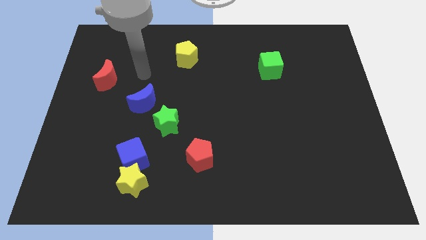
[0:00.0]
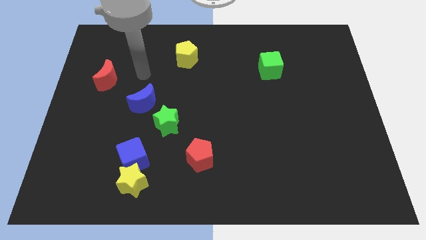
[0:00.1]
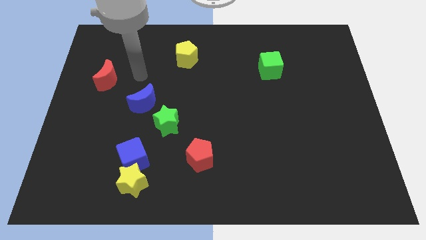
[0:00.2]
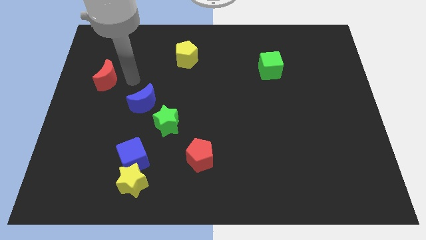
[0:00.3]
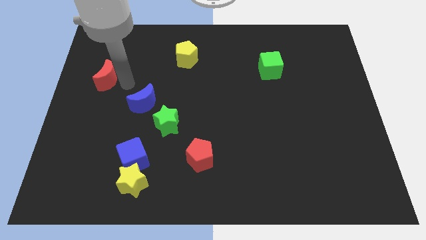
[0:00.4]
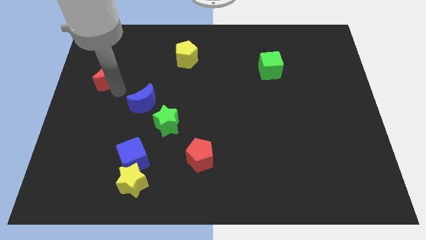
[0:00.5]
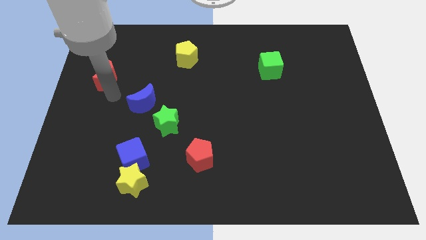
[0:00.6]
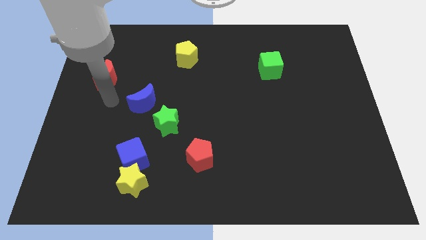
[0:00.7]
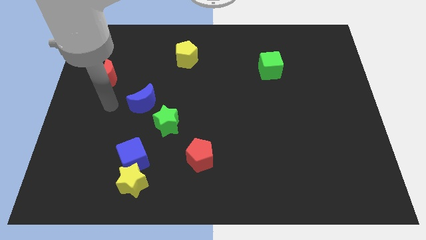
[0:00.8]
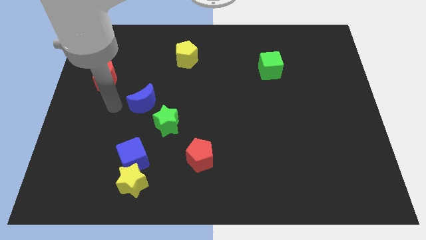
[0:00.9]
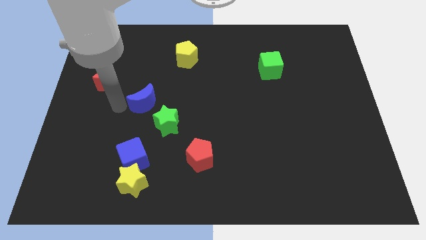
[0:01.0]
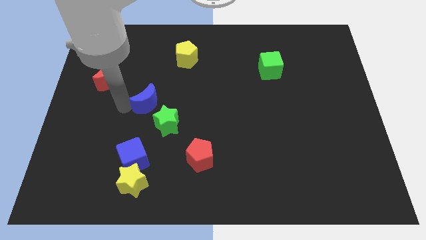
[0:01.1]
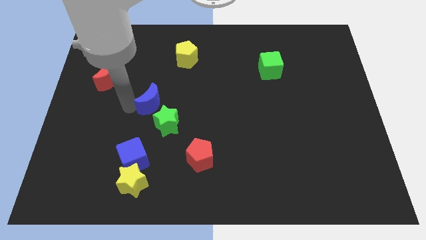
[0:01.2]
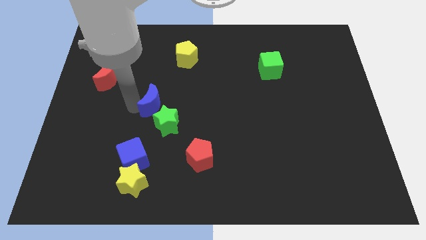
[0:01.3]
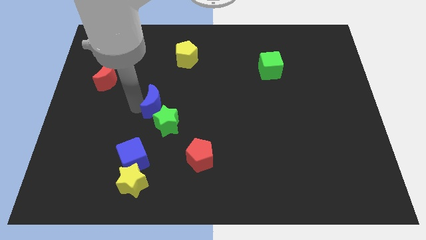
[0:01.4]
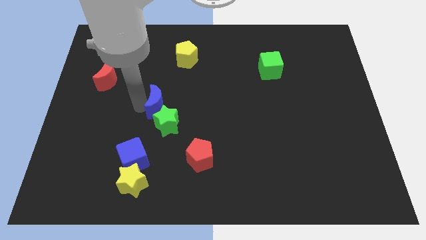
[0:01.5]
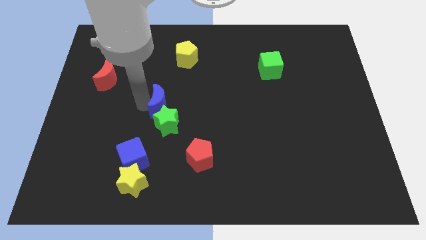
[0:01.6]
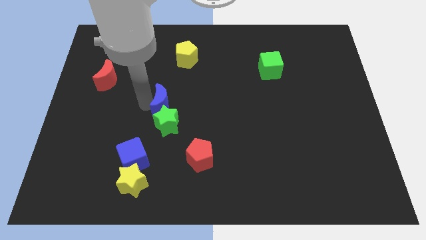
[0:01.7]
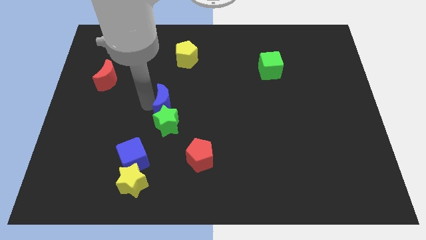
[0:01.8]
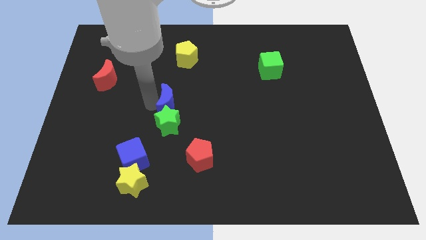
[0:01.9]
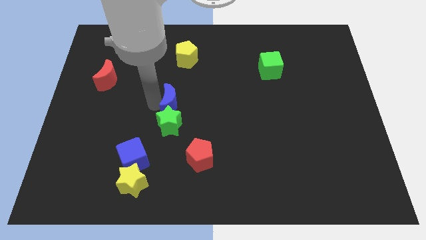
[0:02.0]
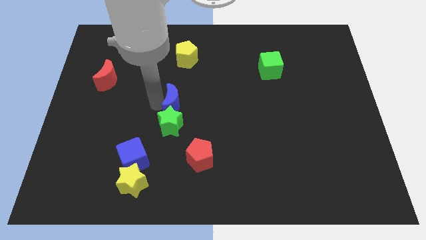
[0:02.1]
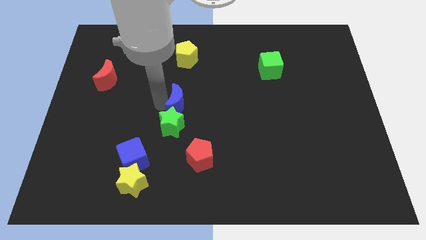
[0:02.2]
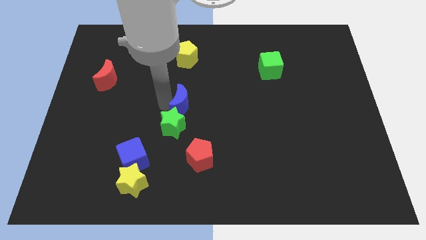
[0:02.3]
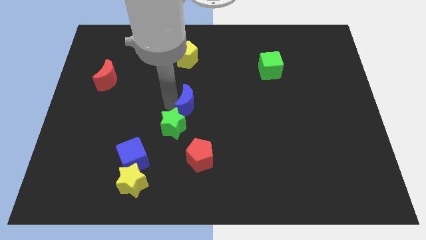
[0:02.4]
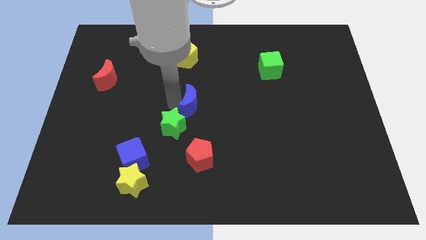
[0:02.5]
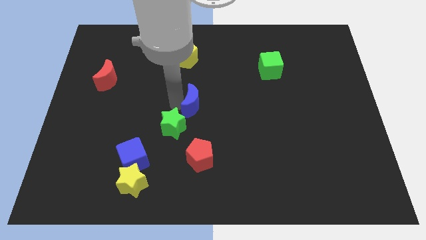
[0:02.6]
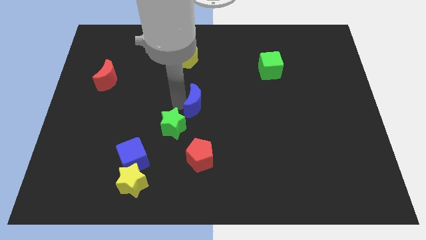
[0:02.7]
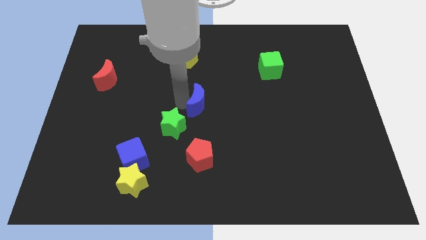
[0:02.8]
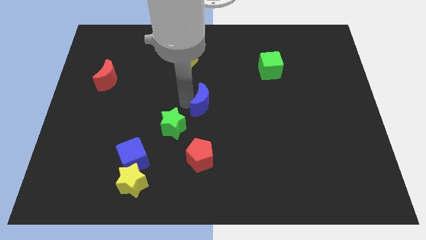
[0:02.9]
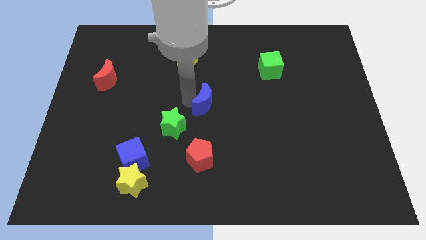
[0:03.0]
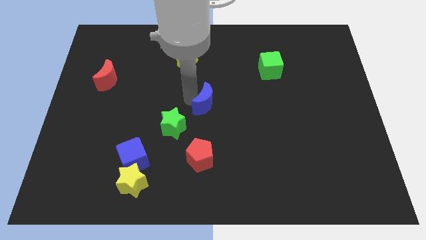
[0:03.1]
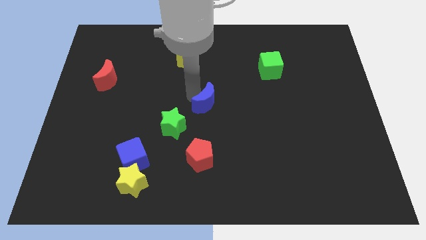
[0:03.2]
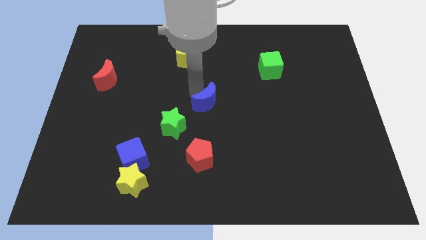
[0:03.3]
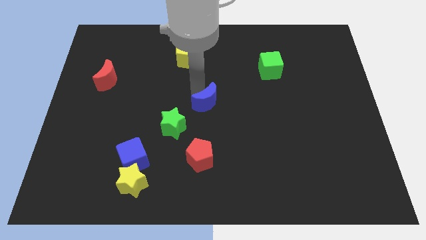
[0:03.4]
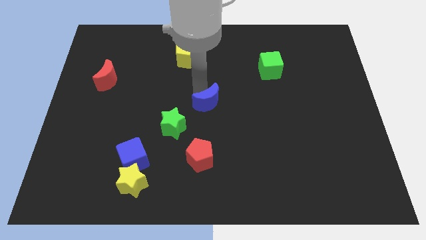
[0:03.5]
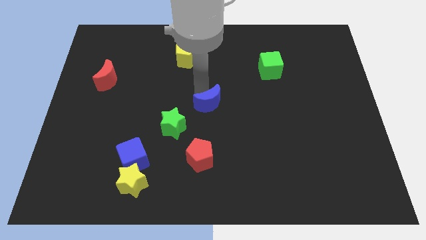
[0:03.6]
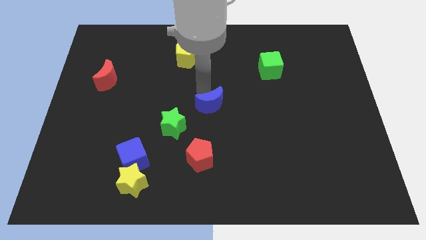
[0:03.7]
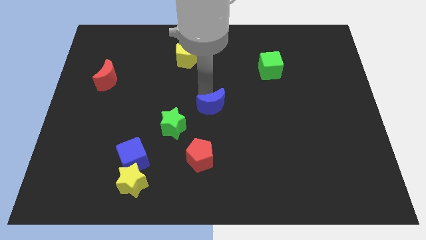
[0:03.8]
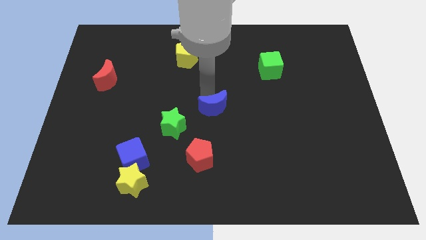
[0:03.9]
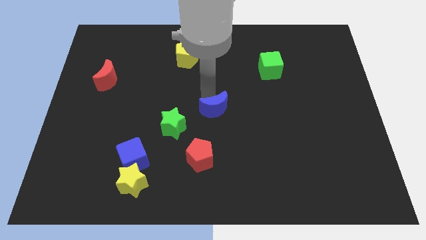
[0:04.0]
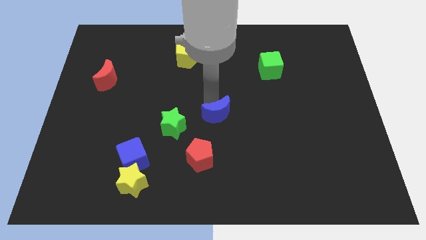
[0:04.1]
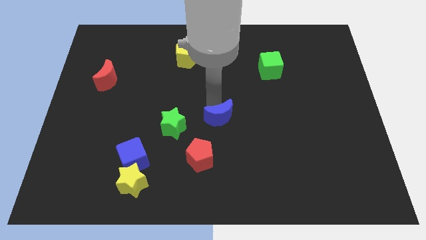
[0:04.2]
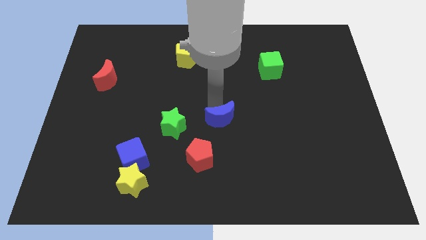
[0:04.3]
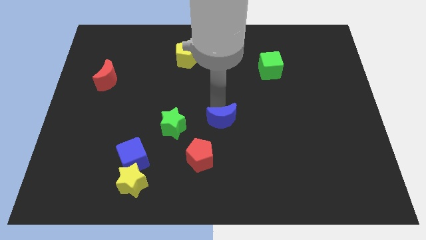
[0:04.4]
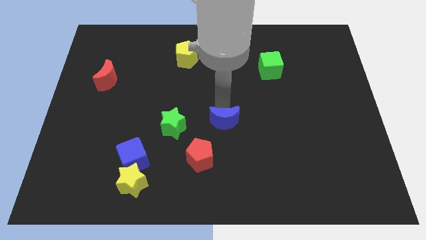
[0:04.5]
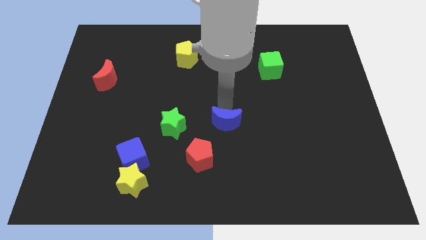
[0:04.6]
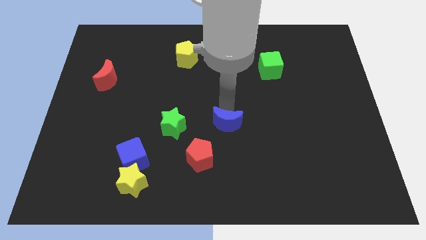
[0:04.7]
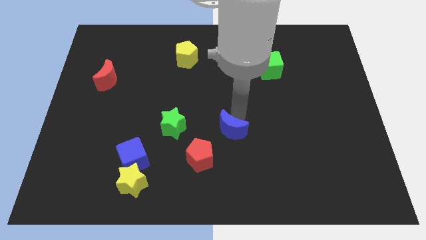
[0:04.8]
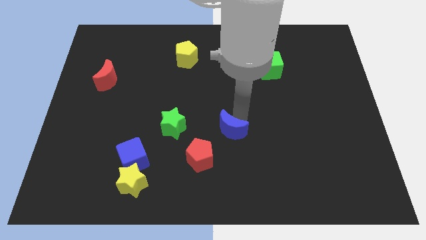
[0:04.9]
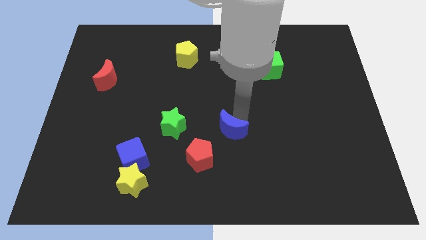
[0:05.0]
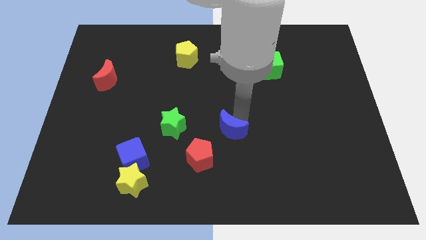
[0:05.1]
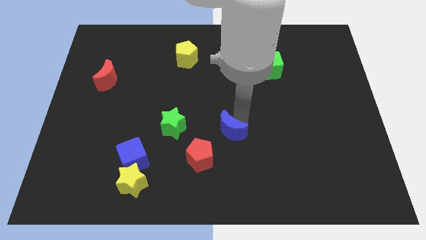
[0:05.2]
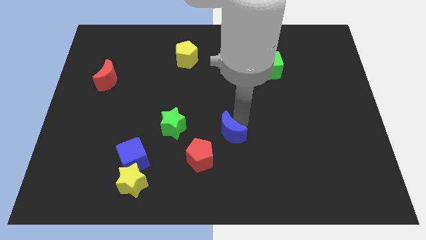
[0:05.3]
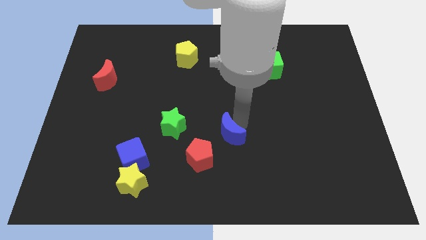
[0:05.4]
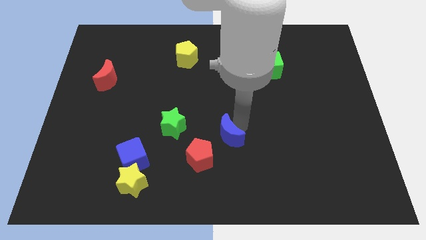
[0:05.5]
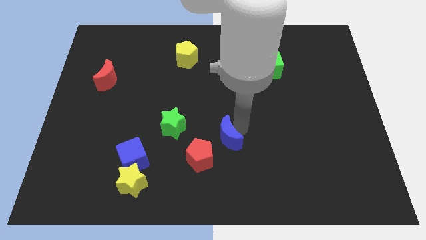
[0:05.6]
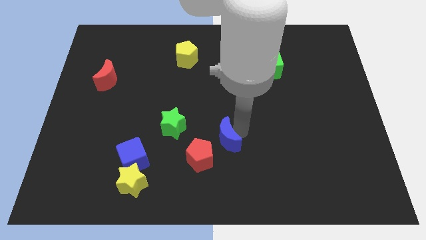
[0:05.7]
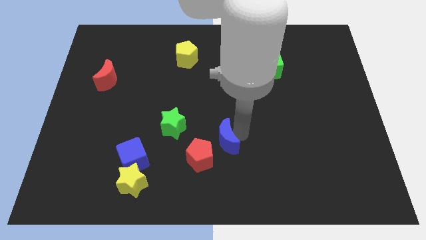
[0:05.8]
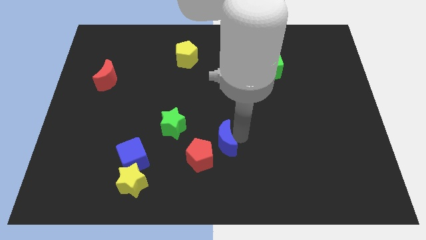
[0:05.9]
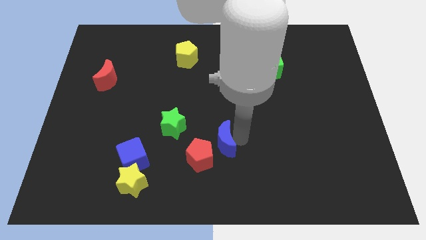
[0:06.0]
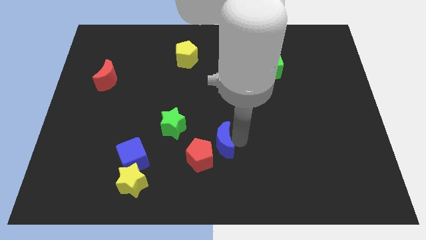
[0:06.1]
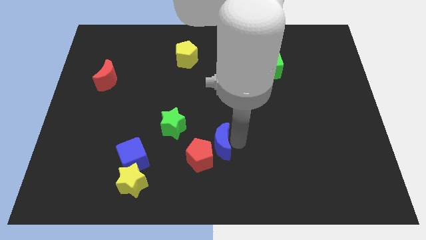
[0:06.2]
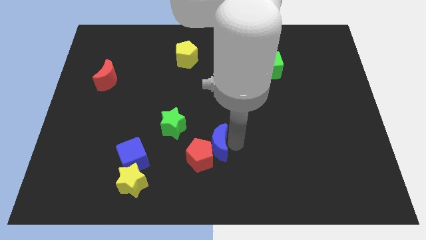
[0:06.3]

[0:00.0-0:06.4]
slide the blue moon to the red pentagon

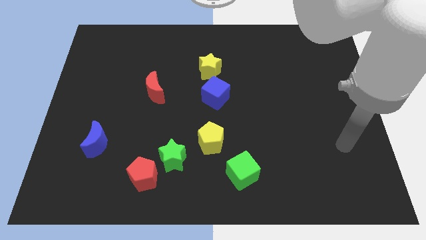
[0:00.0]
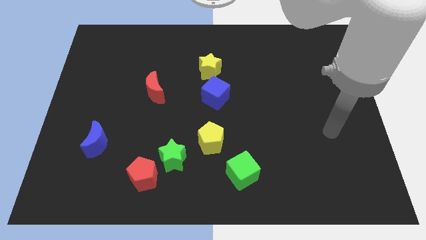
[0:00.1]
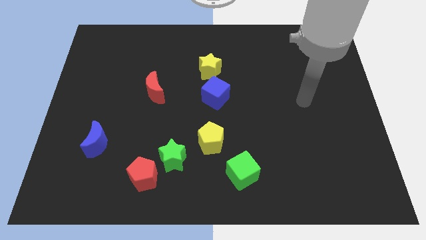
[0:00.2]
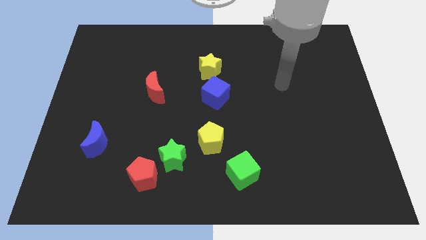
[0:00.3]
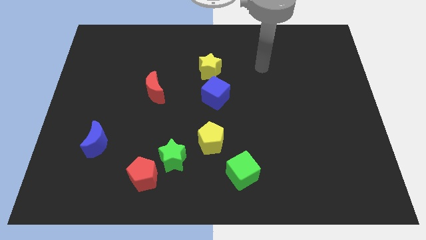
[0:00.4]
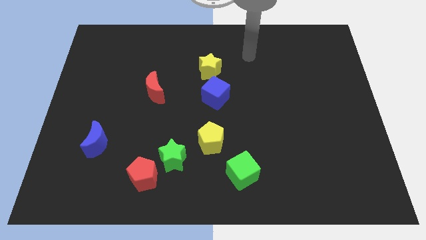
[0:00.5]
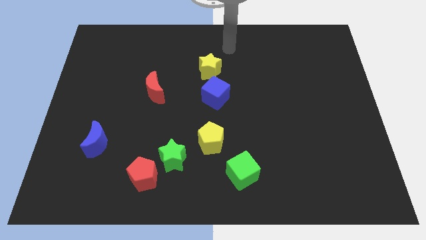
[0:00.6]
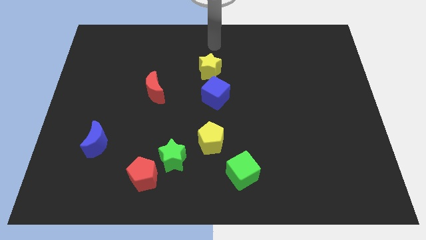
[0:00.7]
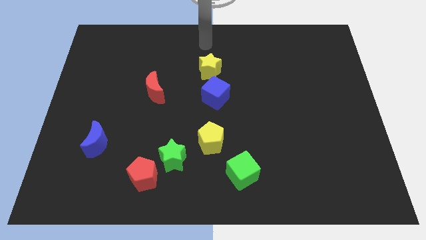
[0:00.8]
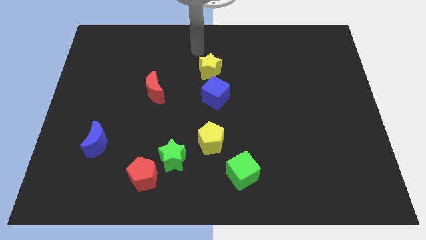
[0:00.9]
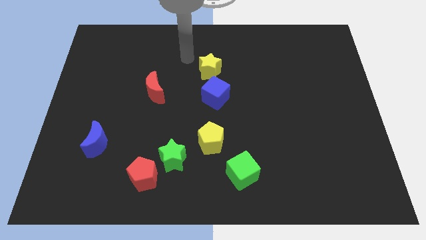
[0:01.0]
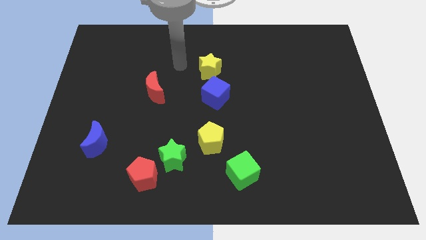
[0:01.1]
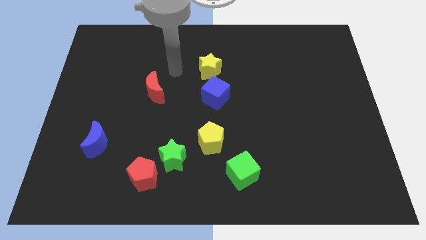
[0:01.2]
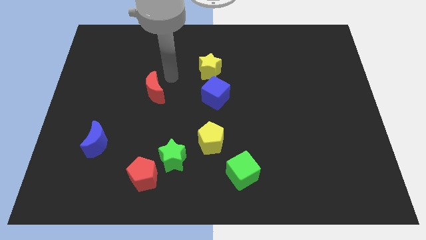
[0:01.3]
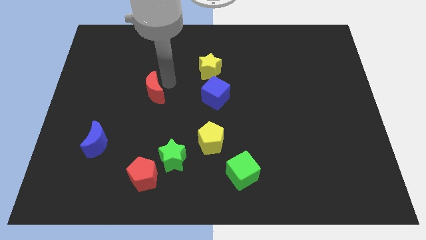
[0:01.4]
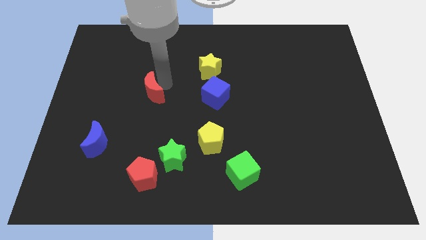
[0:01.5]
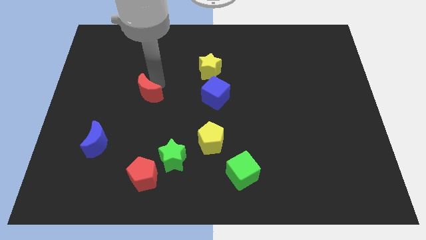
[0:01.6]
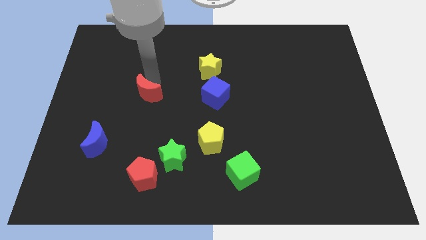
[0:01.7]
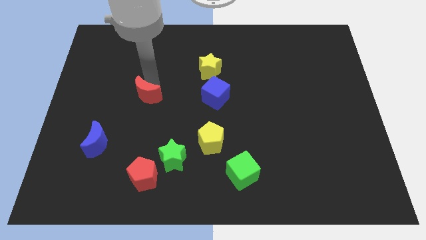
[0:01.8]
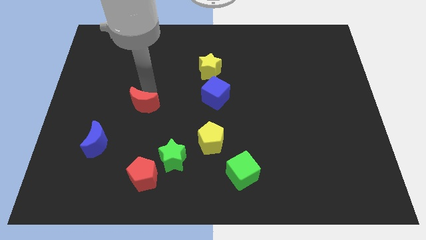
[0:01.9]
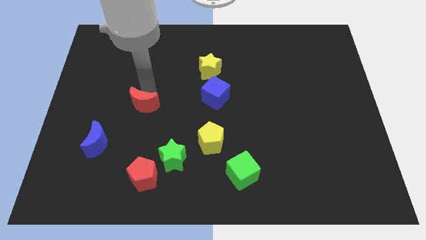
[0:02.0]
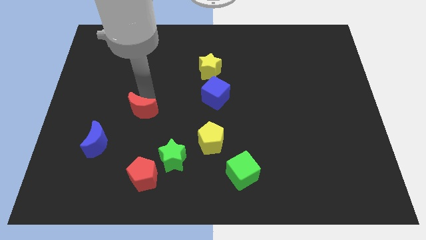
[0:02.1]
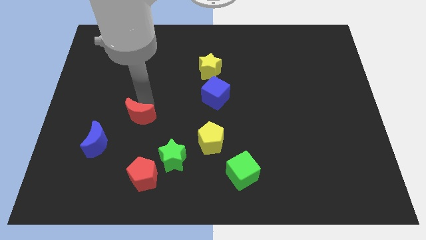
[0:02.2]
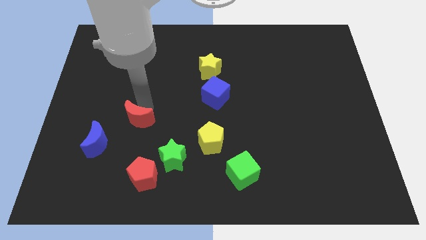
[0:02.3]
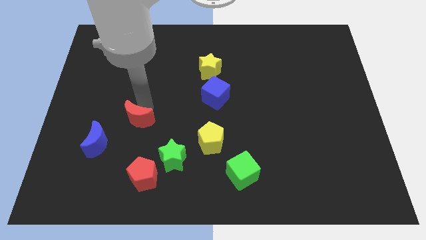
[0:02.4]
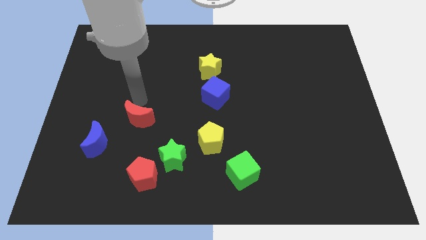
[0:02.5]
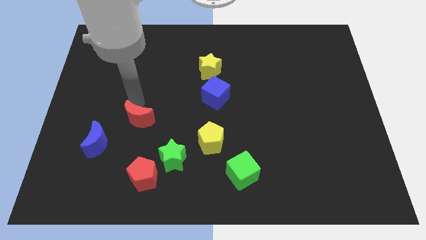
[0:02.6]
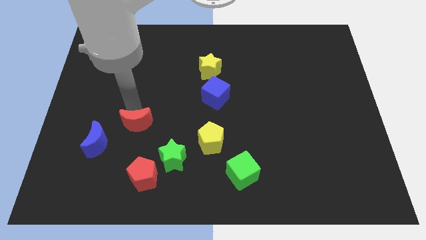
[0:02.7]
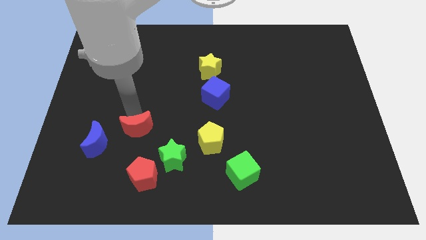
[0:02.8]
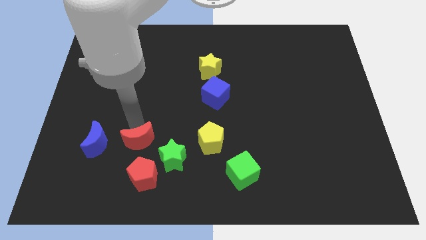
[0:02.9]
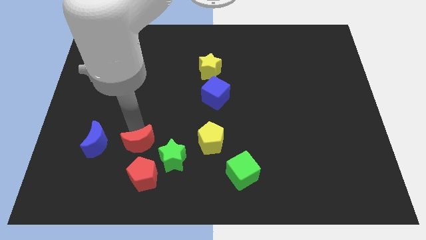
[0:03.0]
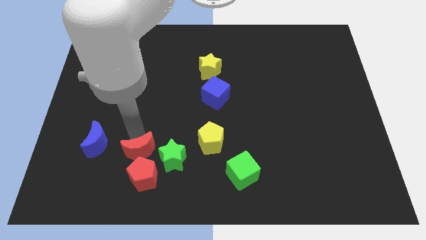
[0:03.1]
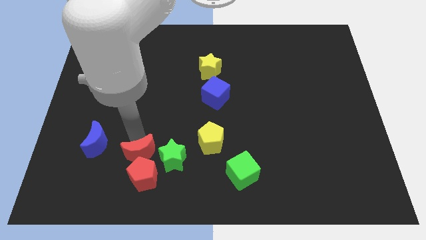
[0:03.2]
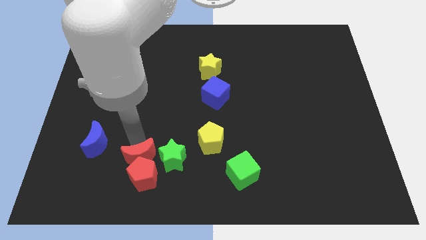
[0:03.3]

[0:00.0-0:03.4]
push the red moon to the red pentagon
